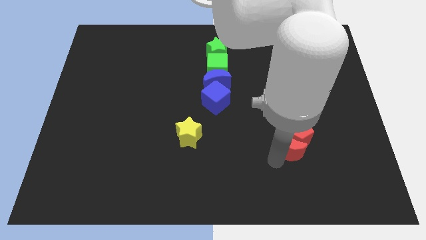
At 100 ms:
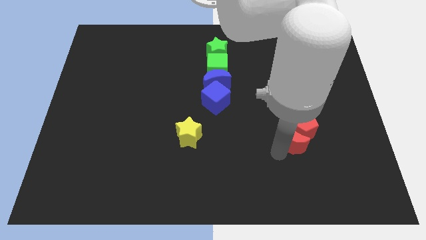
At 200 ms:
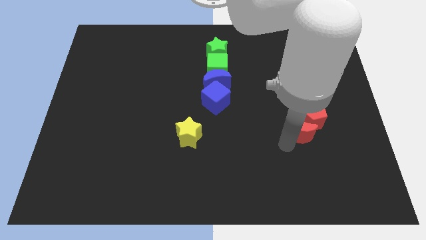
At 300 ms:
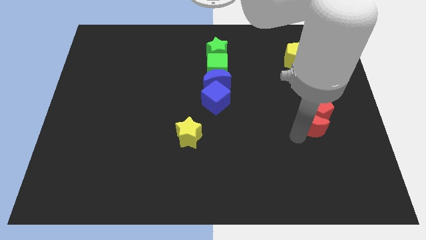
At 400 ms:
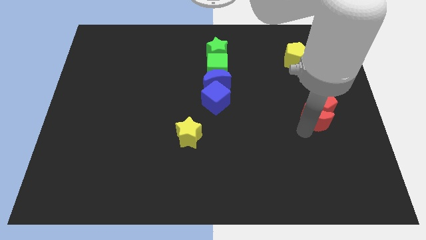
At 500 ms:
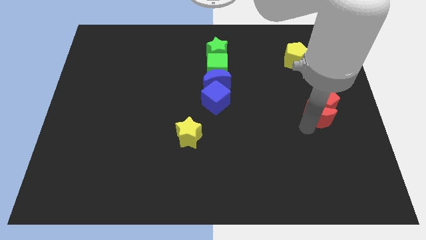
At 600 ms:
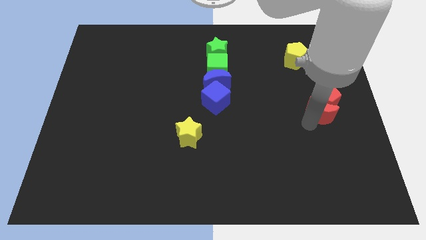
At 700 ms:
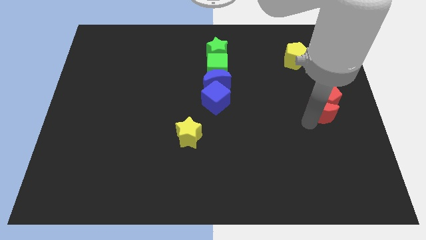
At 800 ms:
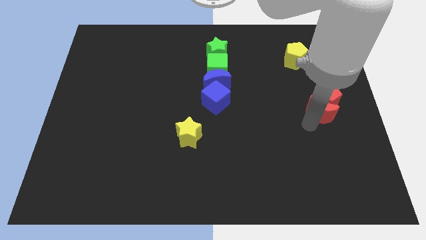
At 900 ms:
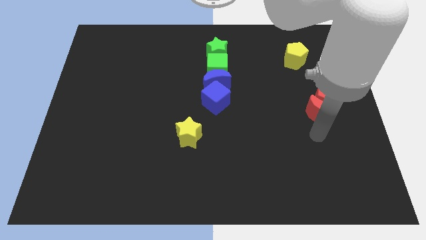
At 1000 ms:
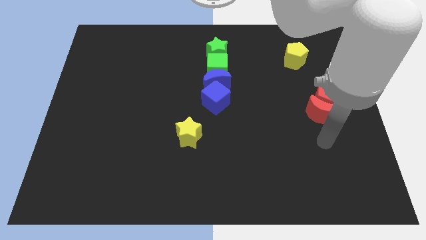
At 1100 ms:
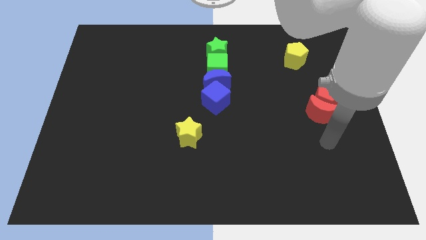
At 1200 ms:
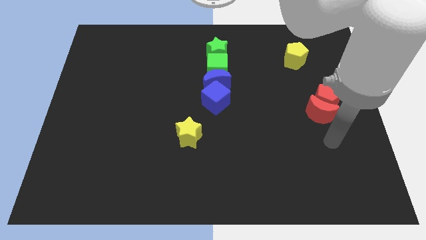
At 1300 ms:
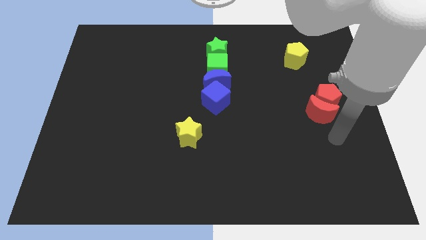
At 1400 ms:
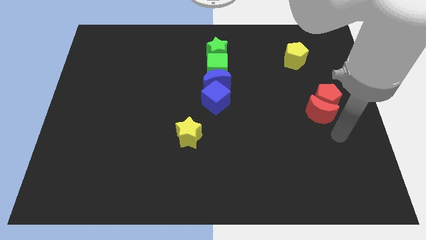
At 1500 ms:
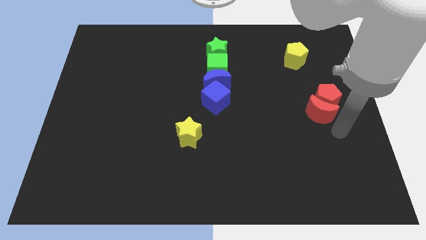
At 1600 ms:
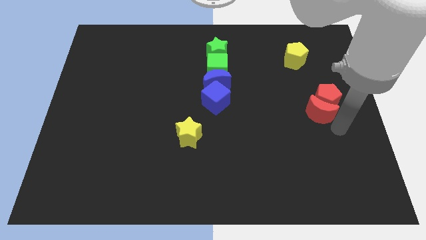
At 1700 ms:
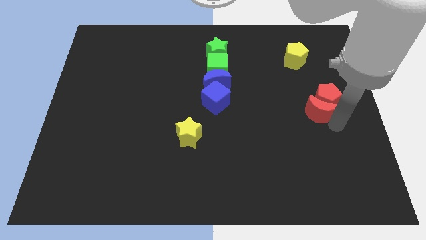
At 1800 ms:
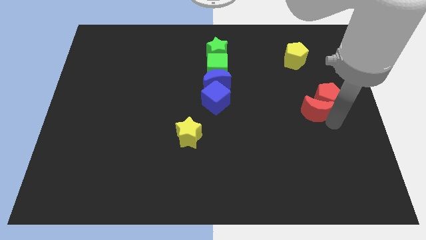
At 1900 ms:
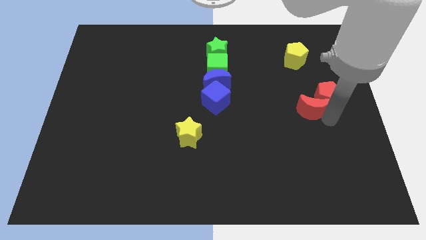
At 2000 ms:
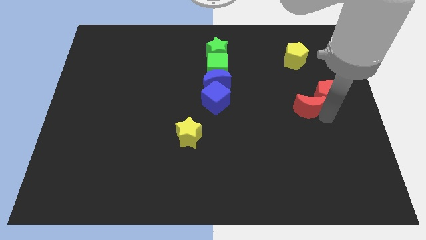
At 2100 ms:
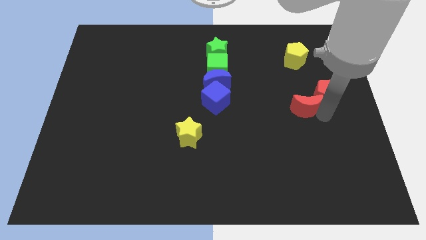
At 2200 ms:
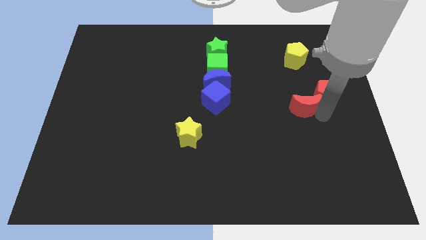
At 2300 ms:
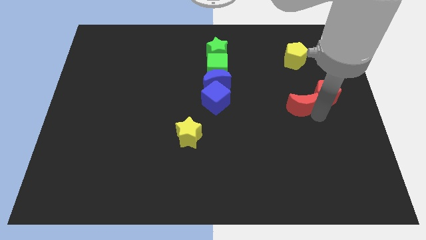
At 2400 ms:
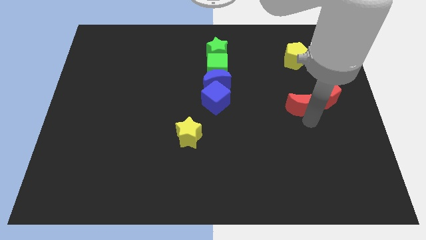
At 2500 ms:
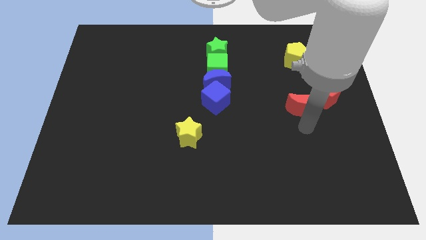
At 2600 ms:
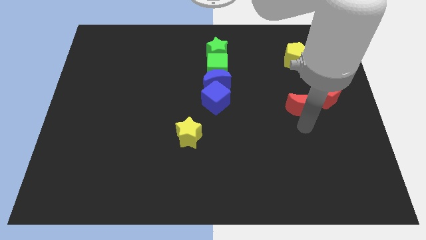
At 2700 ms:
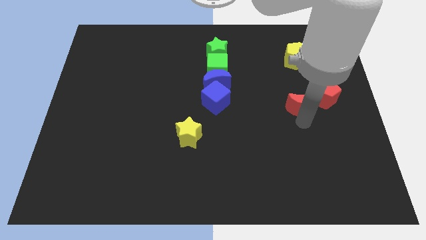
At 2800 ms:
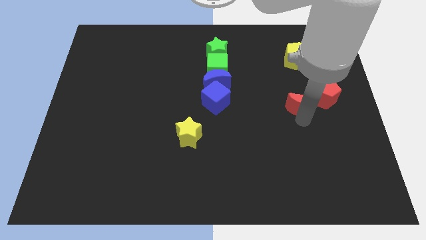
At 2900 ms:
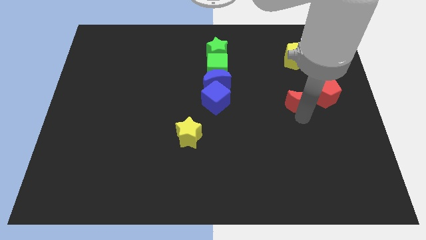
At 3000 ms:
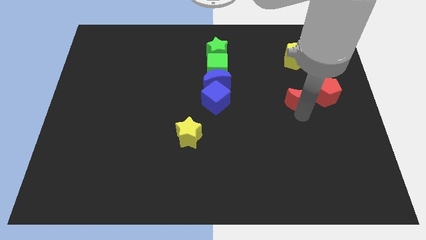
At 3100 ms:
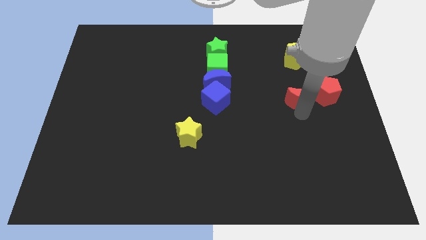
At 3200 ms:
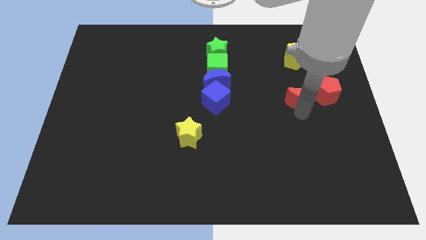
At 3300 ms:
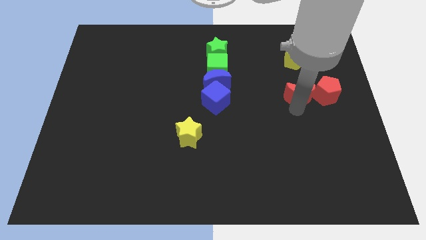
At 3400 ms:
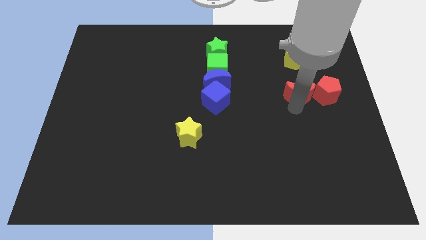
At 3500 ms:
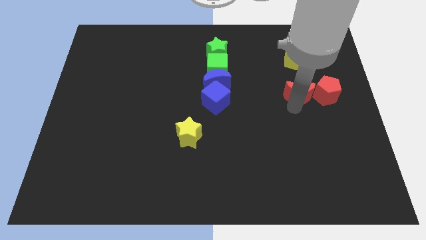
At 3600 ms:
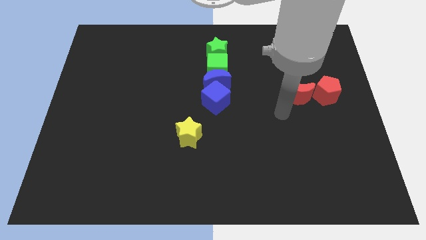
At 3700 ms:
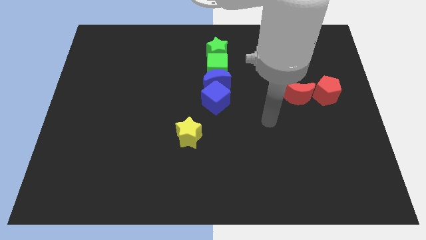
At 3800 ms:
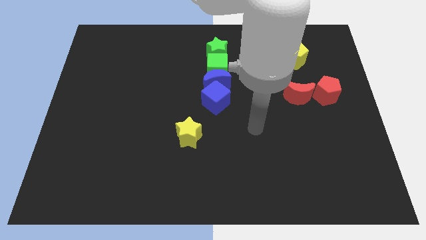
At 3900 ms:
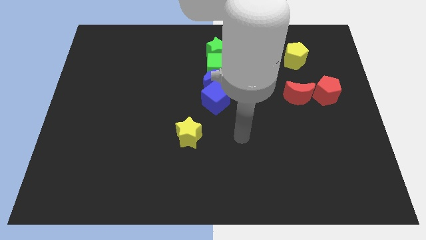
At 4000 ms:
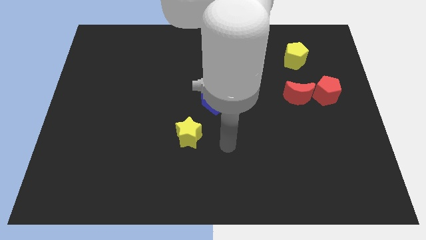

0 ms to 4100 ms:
place the red crescent to the left of red pentagon

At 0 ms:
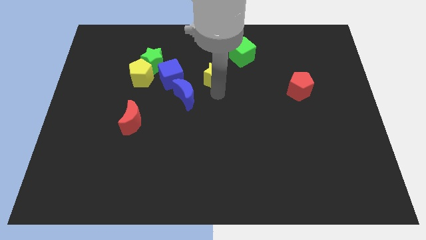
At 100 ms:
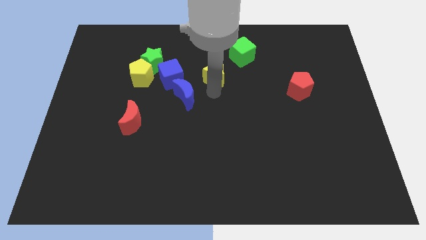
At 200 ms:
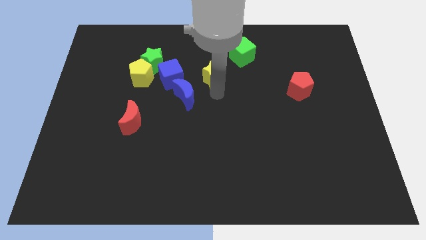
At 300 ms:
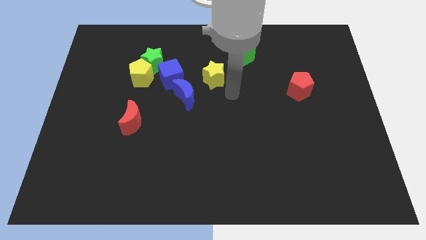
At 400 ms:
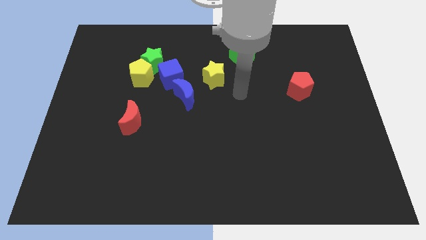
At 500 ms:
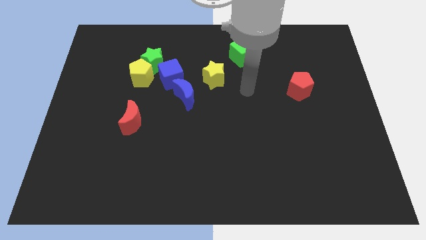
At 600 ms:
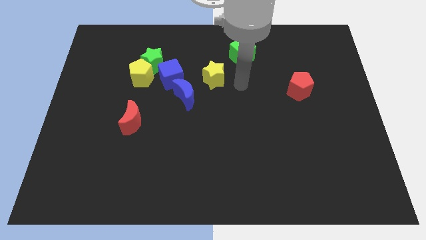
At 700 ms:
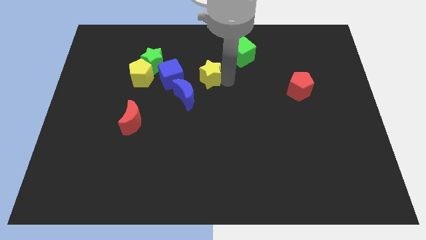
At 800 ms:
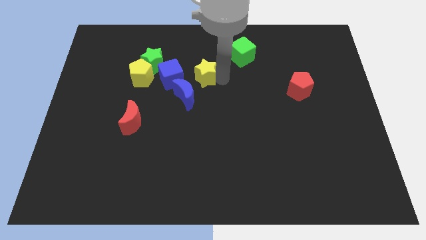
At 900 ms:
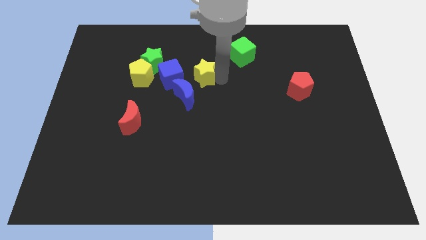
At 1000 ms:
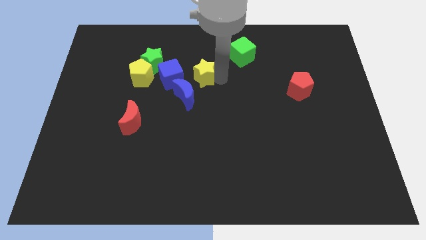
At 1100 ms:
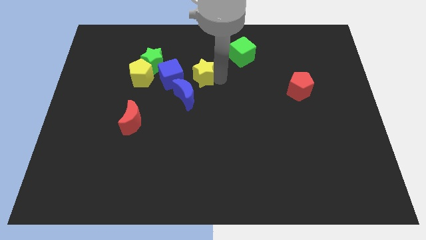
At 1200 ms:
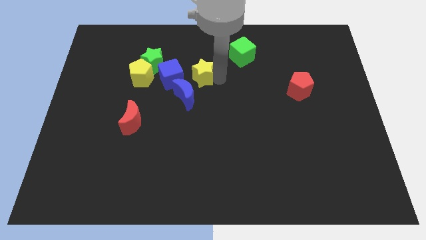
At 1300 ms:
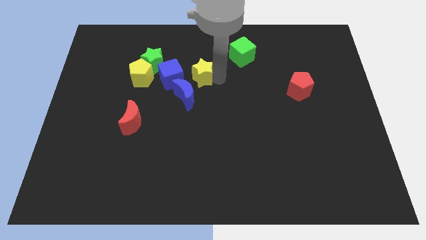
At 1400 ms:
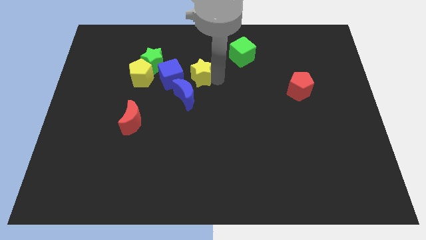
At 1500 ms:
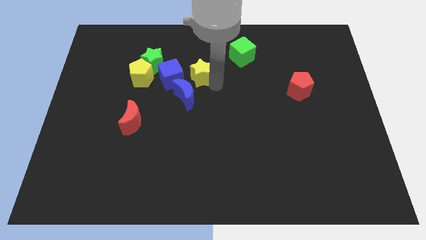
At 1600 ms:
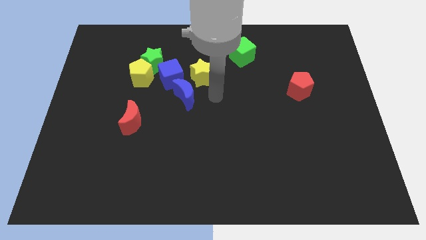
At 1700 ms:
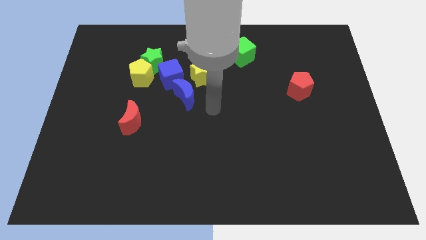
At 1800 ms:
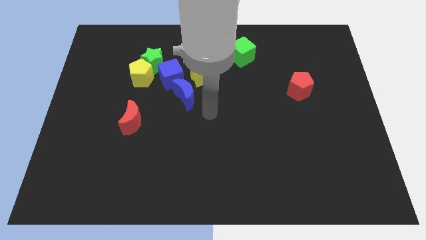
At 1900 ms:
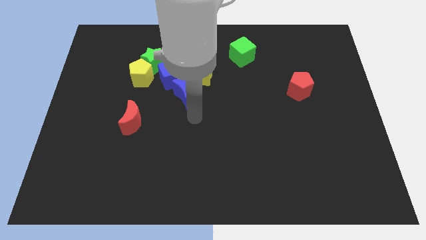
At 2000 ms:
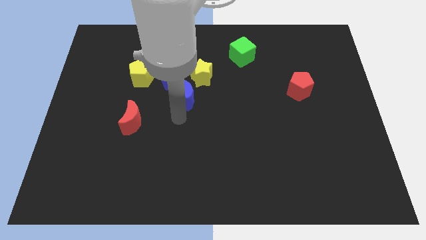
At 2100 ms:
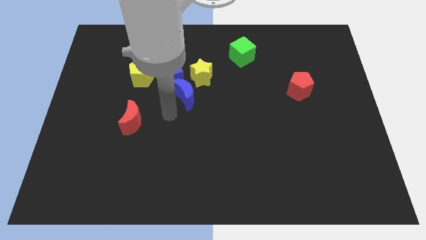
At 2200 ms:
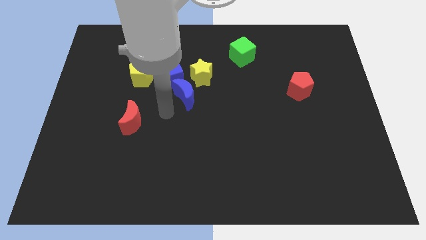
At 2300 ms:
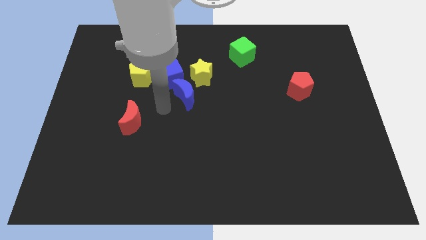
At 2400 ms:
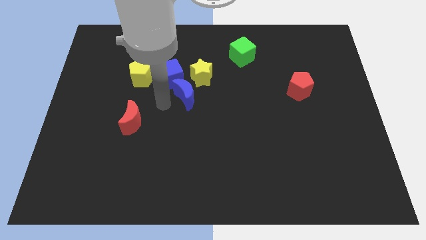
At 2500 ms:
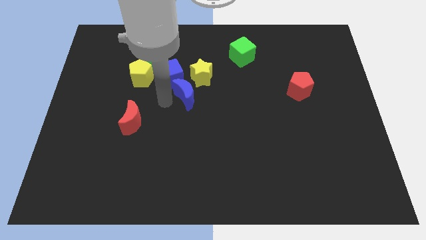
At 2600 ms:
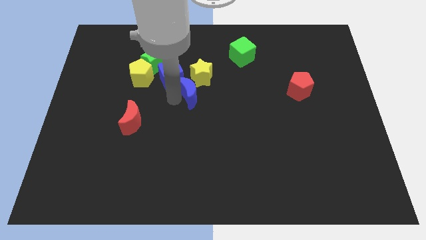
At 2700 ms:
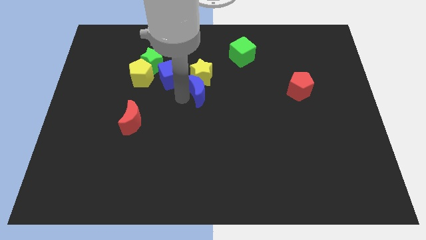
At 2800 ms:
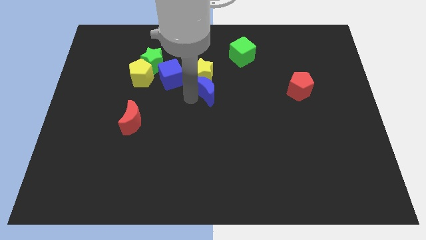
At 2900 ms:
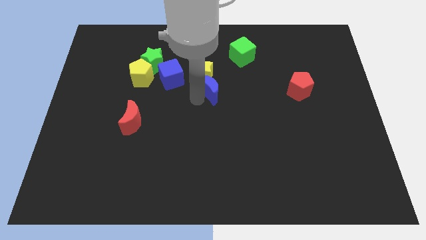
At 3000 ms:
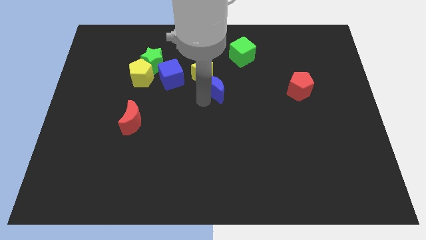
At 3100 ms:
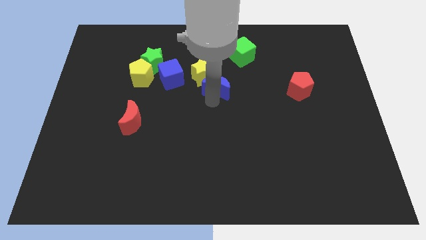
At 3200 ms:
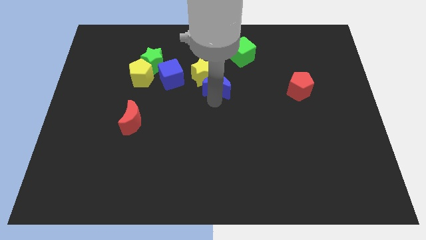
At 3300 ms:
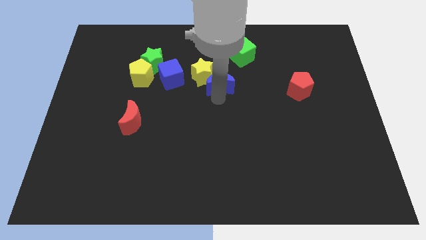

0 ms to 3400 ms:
move the blue crescent below the yellow star

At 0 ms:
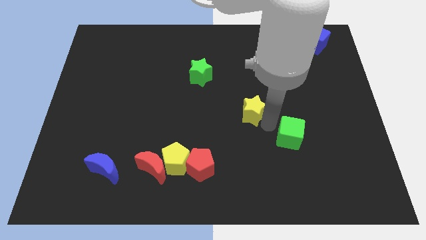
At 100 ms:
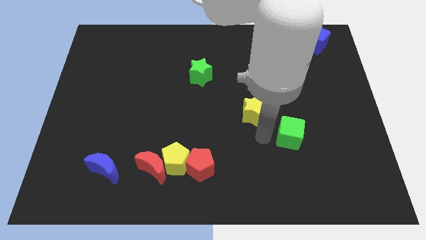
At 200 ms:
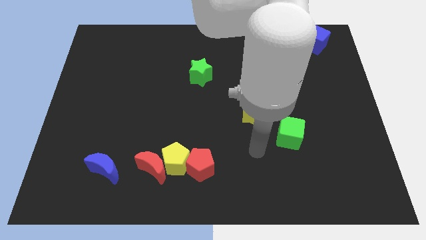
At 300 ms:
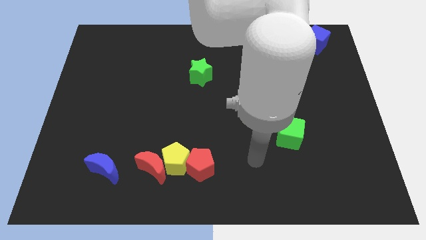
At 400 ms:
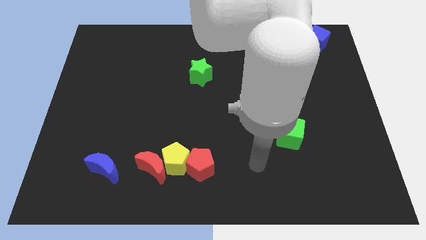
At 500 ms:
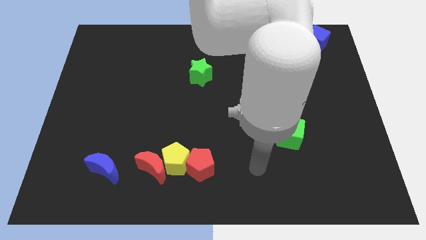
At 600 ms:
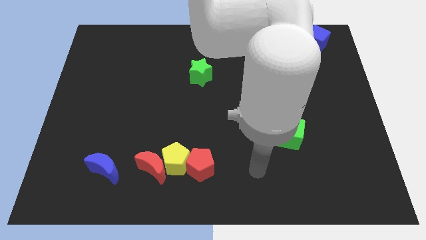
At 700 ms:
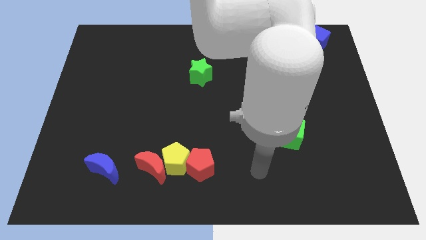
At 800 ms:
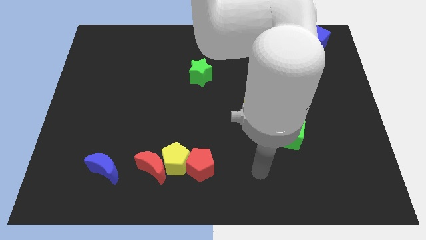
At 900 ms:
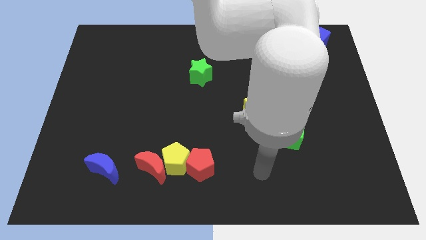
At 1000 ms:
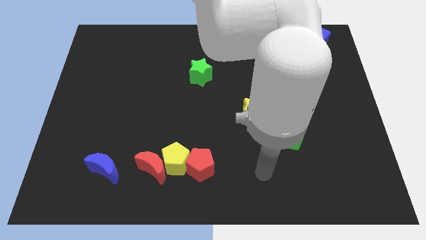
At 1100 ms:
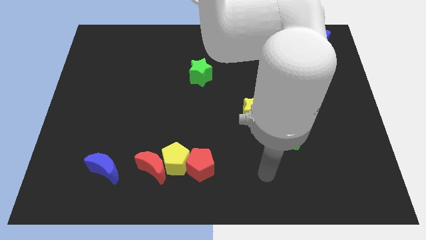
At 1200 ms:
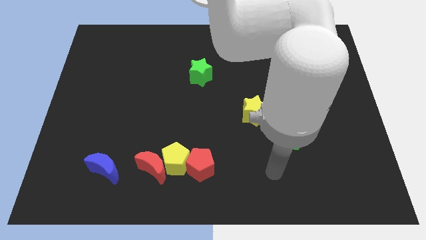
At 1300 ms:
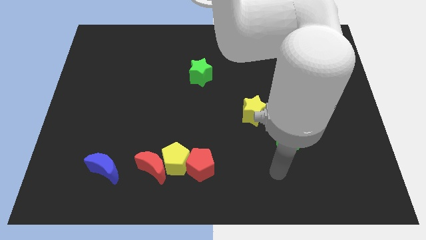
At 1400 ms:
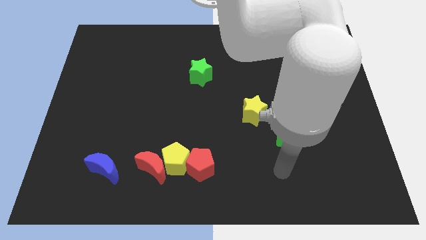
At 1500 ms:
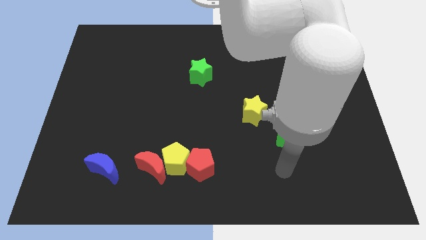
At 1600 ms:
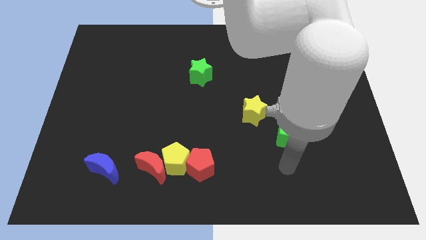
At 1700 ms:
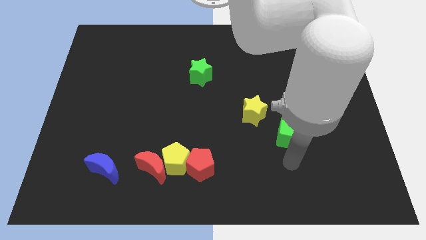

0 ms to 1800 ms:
place the arm down to the green cube
